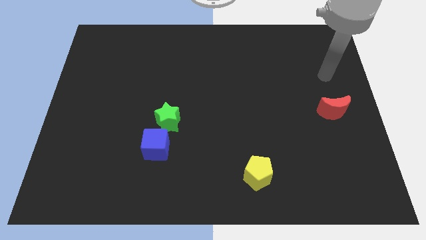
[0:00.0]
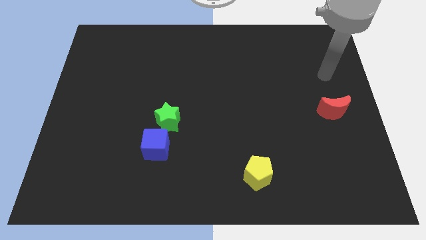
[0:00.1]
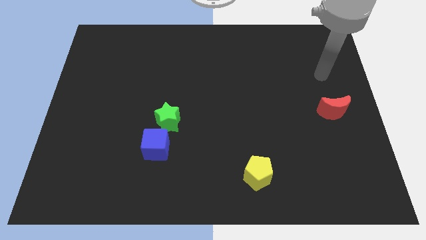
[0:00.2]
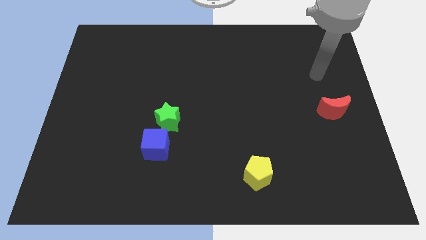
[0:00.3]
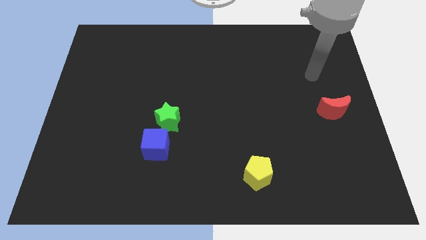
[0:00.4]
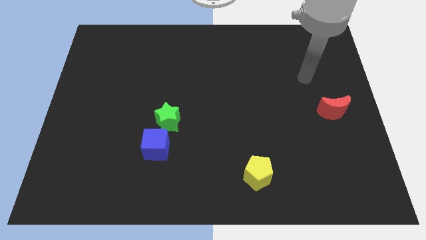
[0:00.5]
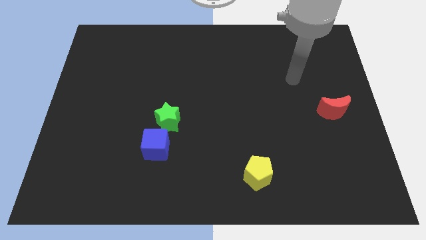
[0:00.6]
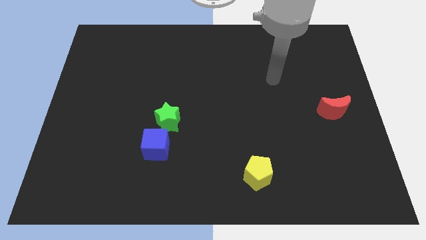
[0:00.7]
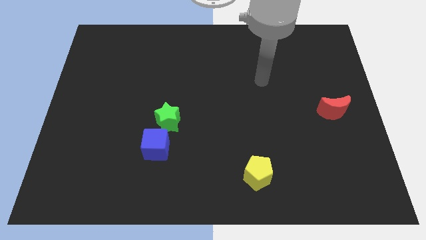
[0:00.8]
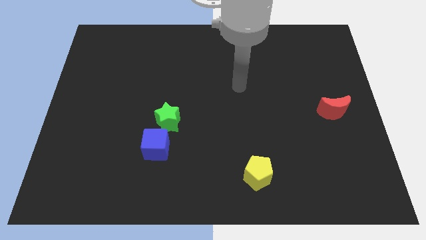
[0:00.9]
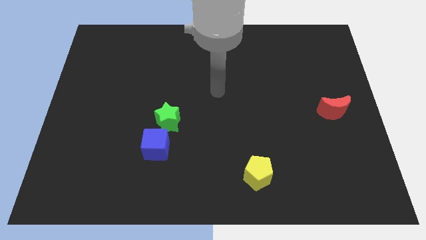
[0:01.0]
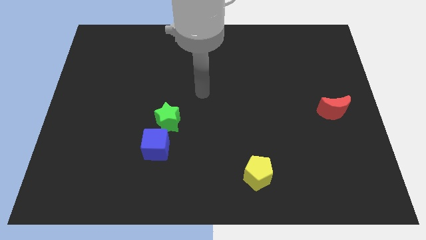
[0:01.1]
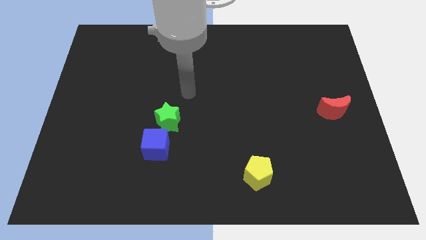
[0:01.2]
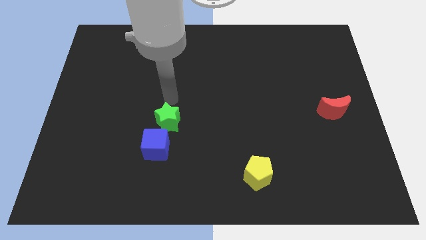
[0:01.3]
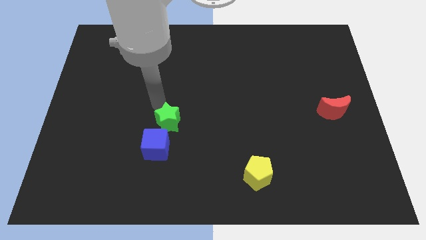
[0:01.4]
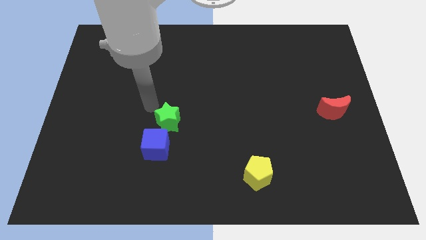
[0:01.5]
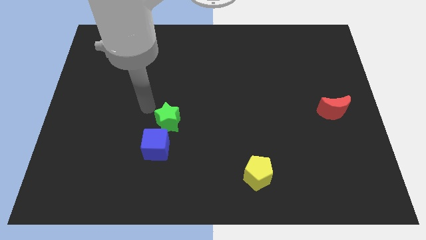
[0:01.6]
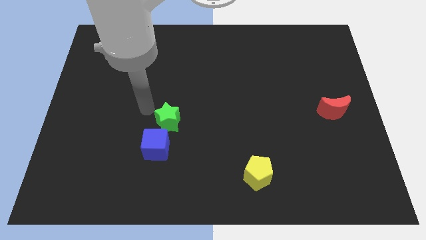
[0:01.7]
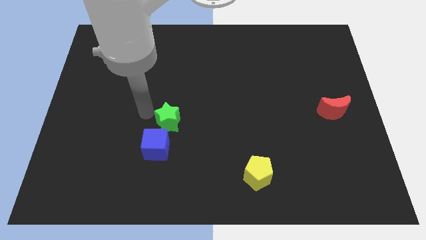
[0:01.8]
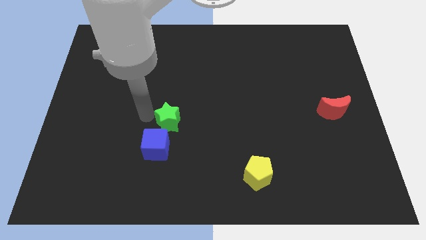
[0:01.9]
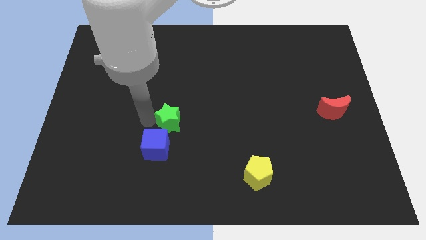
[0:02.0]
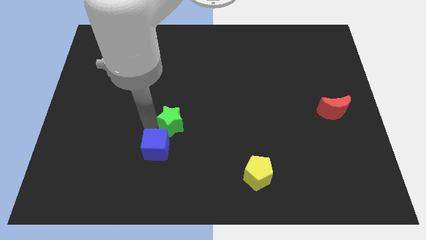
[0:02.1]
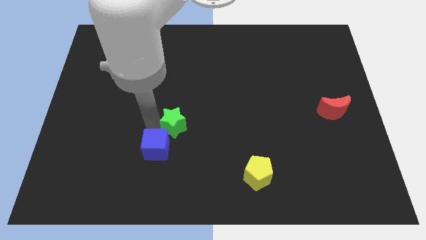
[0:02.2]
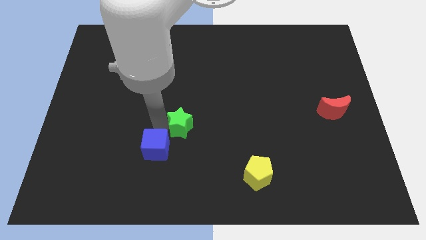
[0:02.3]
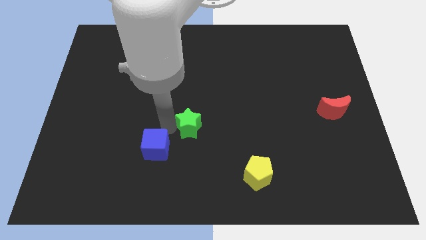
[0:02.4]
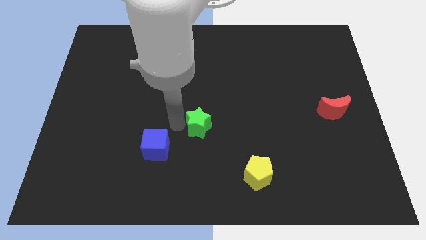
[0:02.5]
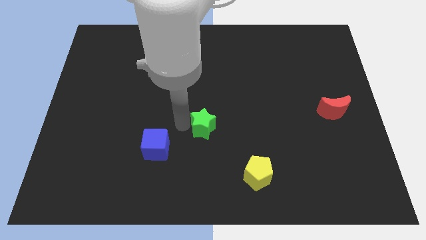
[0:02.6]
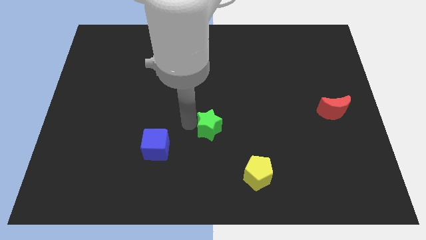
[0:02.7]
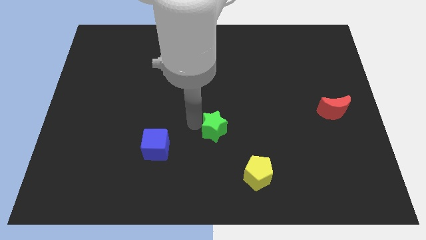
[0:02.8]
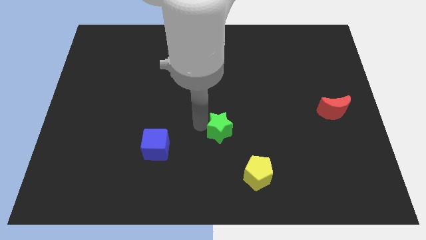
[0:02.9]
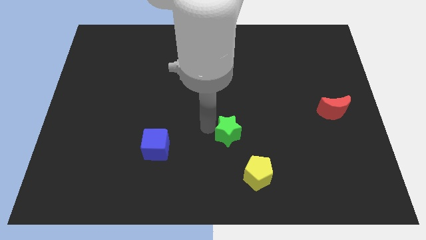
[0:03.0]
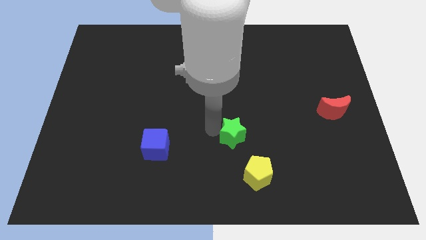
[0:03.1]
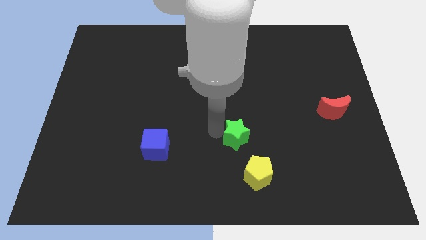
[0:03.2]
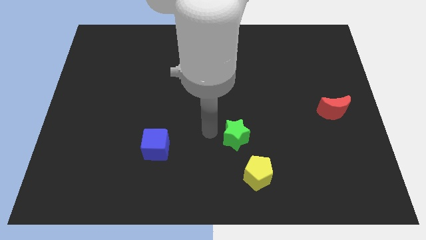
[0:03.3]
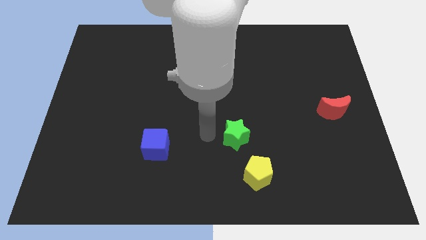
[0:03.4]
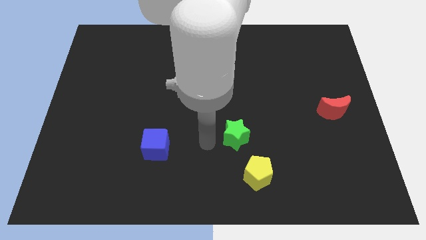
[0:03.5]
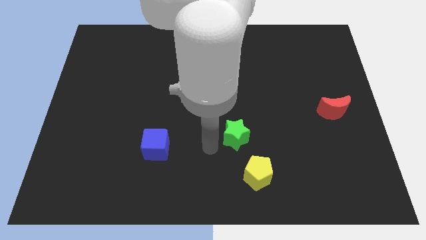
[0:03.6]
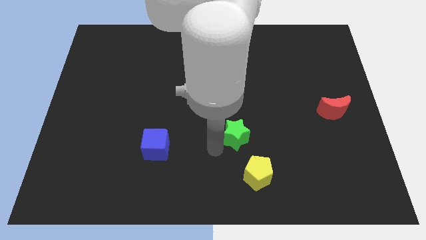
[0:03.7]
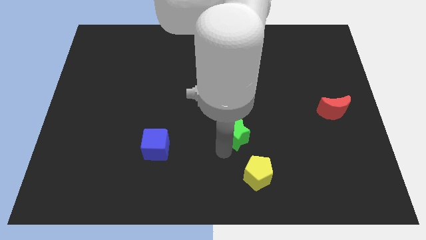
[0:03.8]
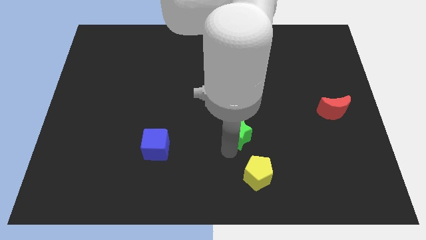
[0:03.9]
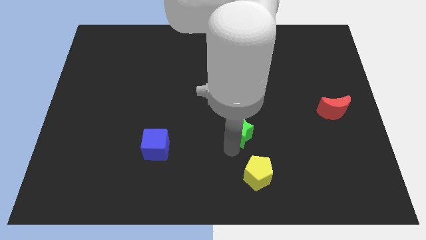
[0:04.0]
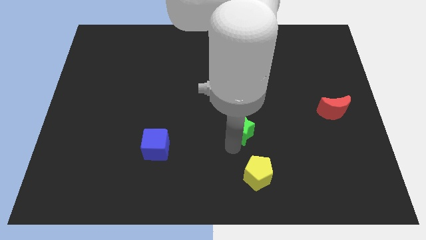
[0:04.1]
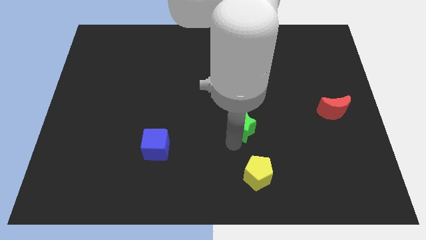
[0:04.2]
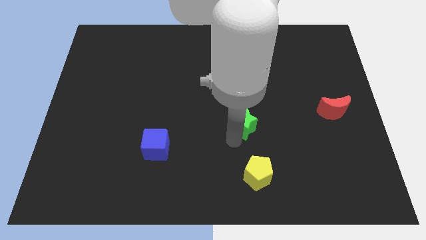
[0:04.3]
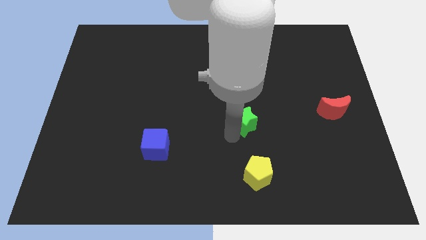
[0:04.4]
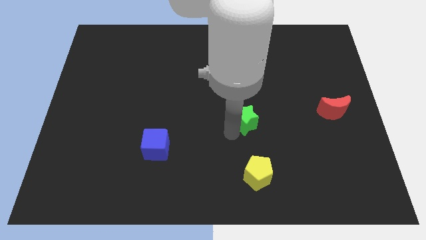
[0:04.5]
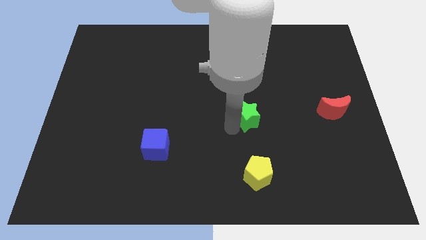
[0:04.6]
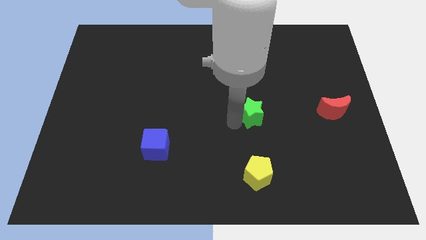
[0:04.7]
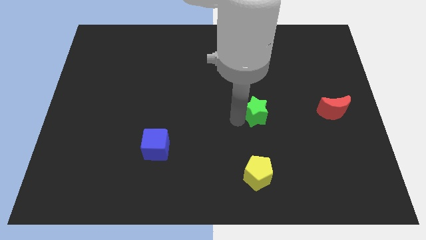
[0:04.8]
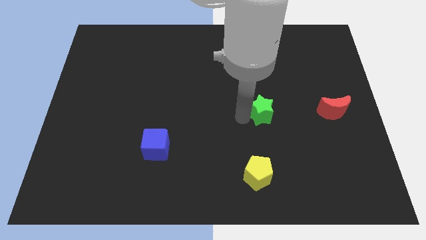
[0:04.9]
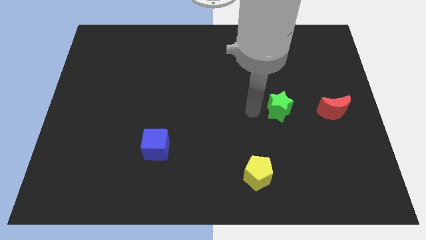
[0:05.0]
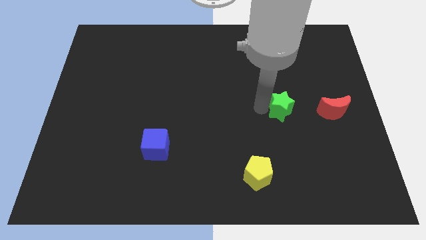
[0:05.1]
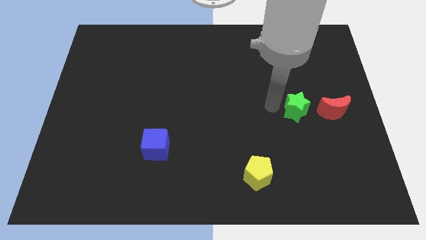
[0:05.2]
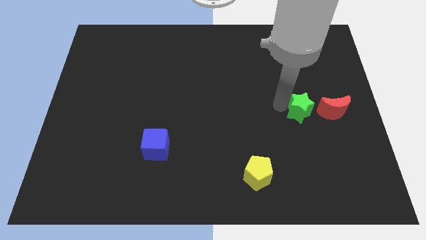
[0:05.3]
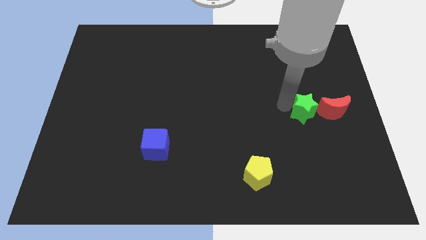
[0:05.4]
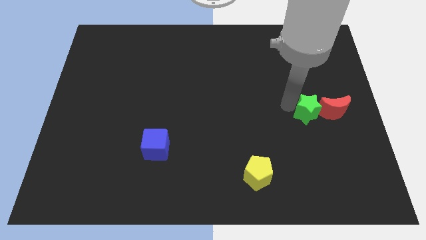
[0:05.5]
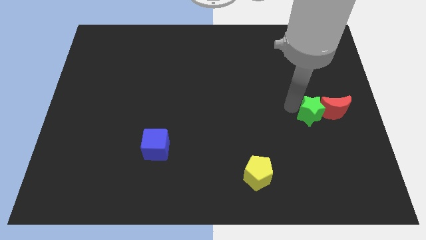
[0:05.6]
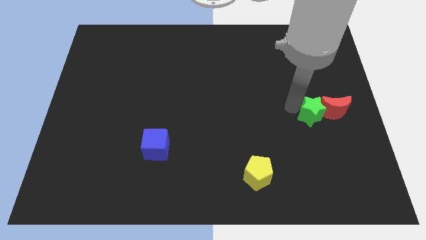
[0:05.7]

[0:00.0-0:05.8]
slide the green block close to the red moon

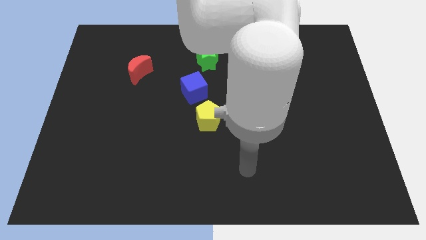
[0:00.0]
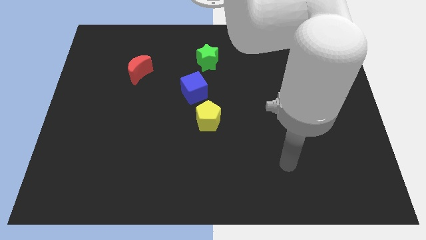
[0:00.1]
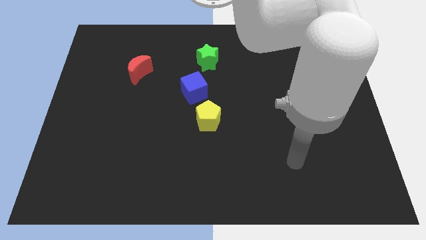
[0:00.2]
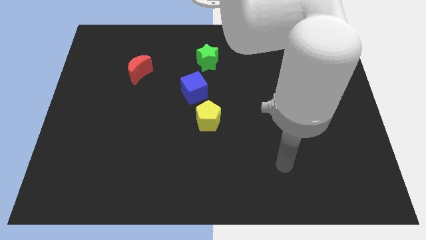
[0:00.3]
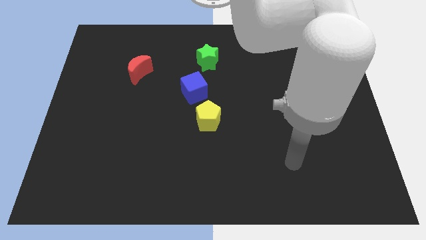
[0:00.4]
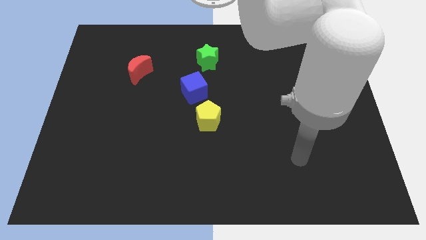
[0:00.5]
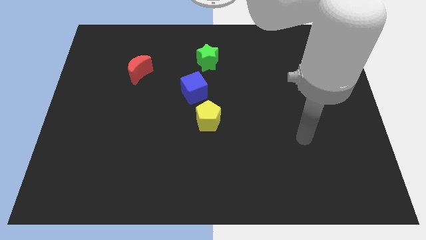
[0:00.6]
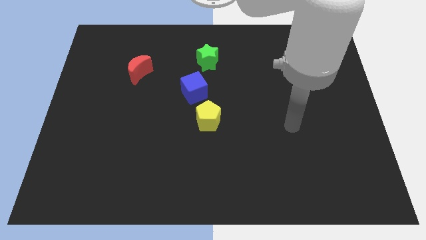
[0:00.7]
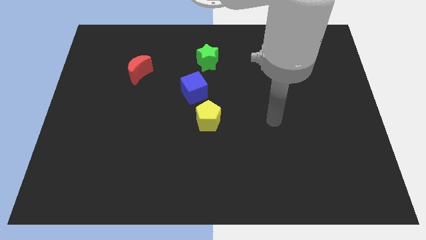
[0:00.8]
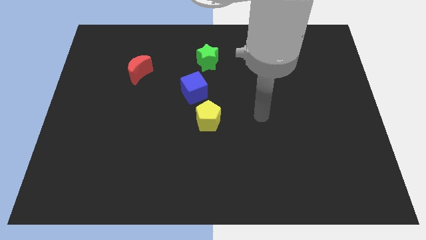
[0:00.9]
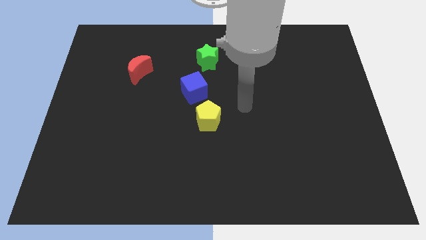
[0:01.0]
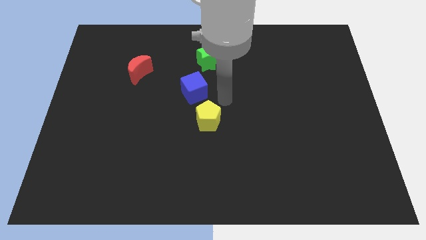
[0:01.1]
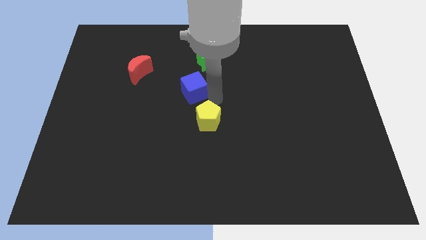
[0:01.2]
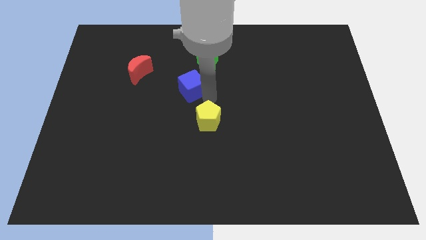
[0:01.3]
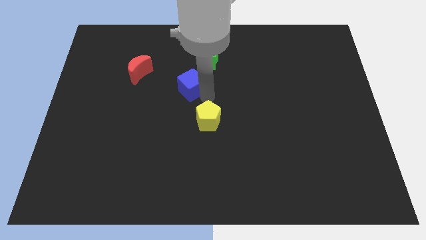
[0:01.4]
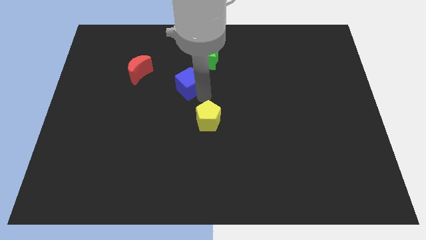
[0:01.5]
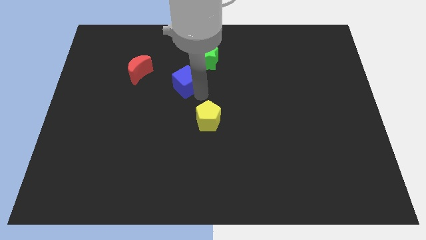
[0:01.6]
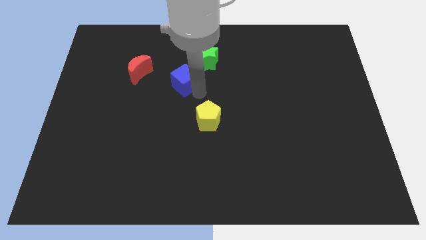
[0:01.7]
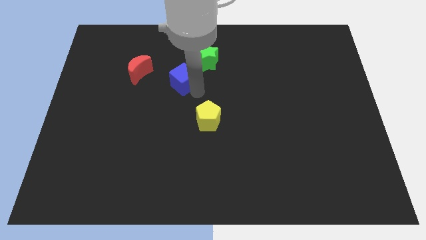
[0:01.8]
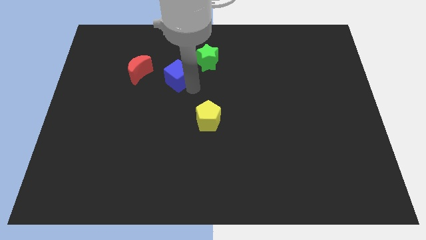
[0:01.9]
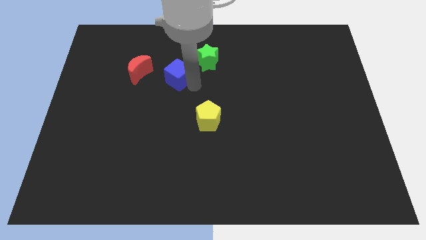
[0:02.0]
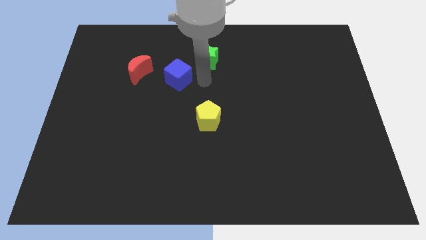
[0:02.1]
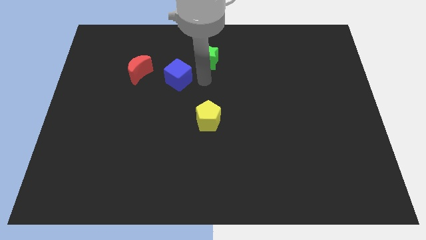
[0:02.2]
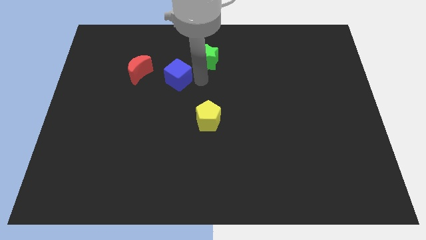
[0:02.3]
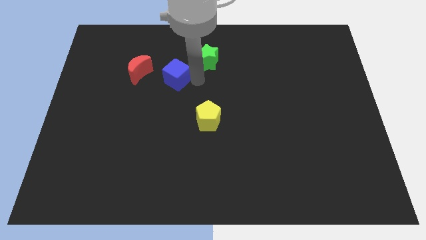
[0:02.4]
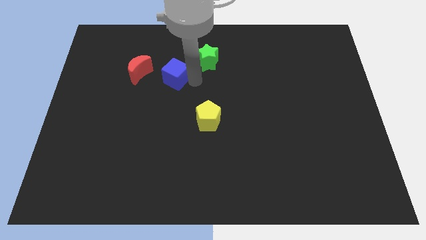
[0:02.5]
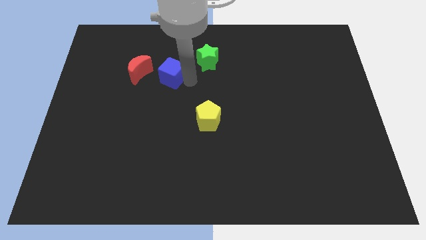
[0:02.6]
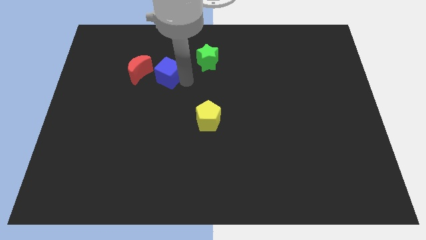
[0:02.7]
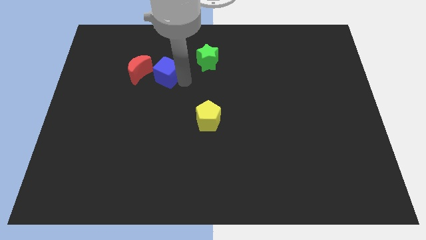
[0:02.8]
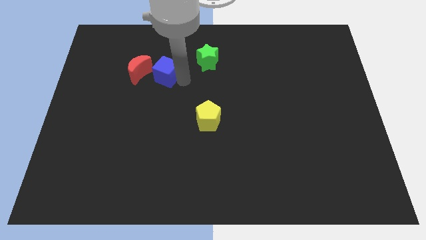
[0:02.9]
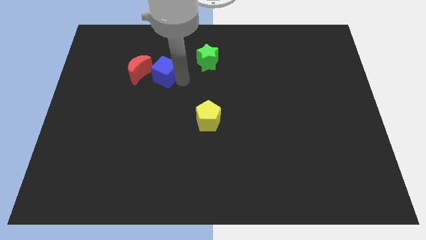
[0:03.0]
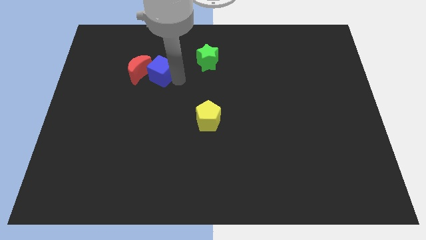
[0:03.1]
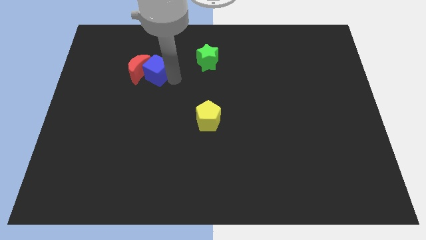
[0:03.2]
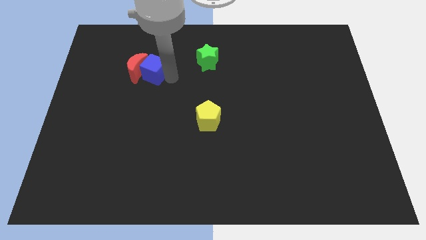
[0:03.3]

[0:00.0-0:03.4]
push the blue block towards the moon
